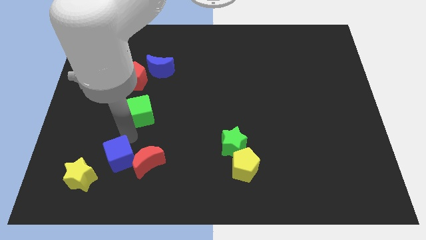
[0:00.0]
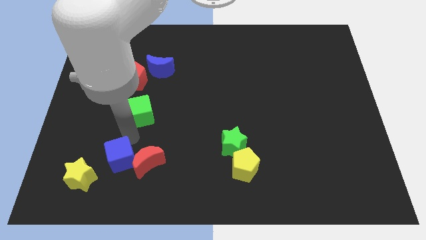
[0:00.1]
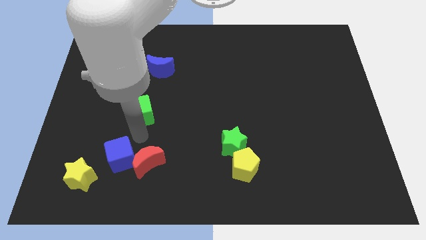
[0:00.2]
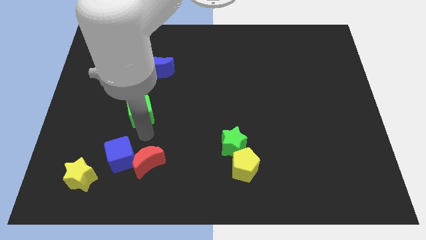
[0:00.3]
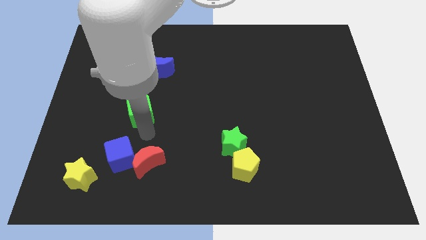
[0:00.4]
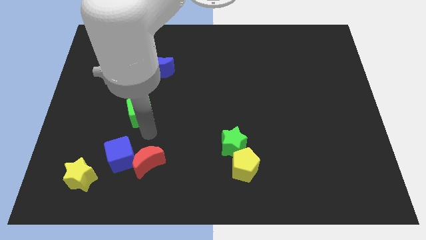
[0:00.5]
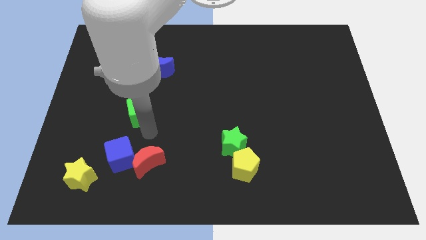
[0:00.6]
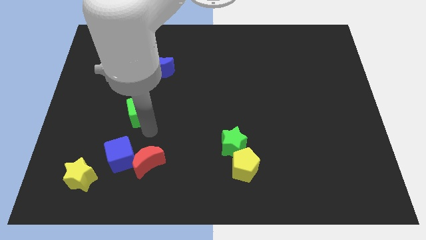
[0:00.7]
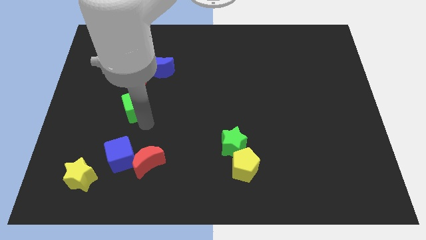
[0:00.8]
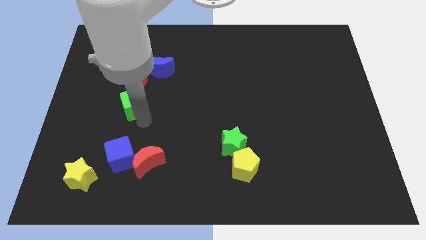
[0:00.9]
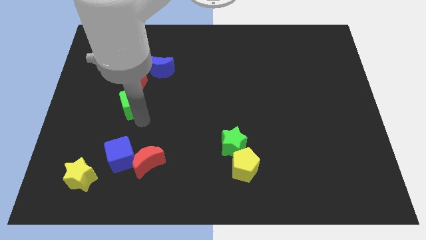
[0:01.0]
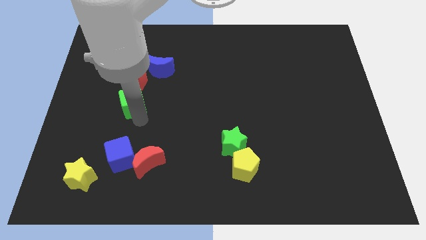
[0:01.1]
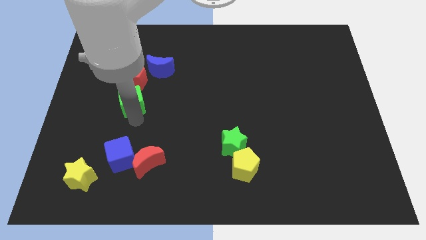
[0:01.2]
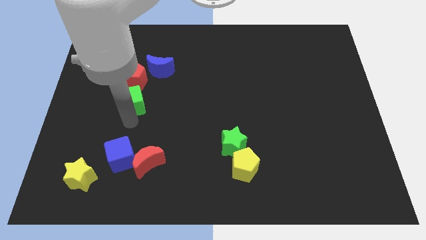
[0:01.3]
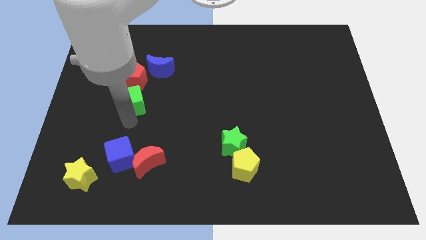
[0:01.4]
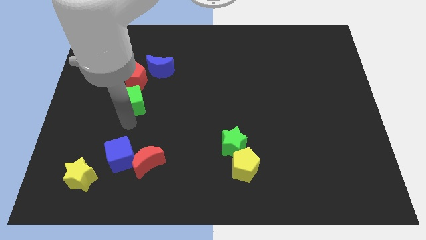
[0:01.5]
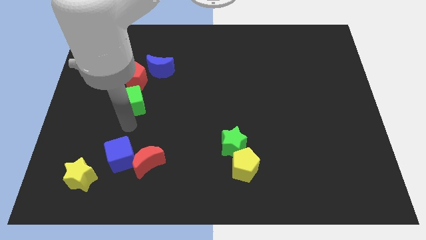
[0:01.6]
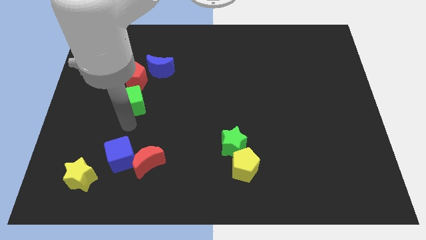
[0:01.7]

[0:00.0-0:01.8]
push green cube below the red pentagon

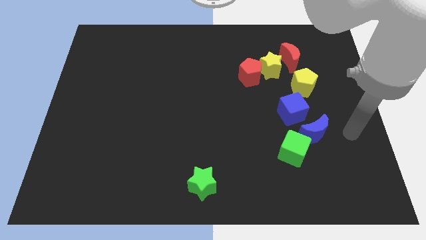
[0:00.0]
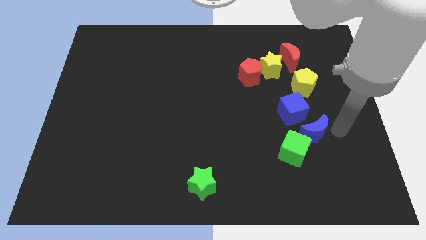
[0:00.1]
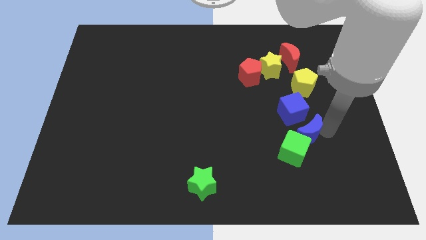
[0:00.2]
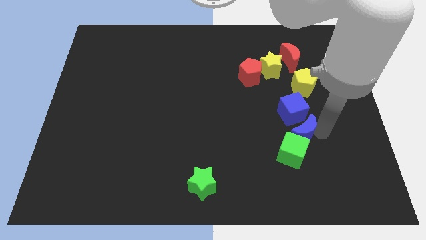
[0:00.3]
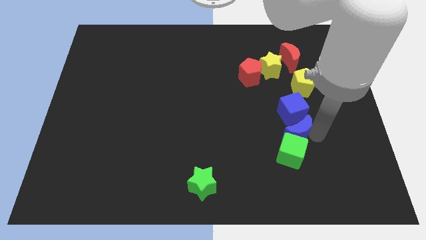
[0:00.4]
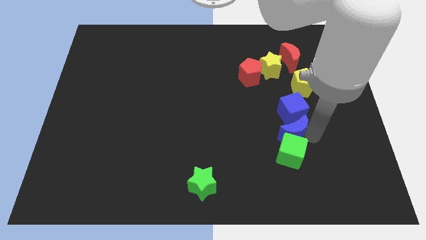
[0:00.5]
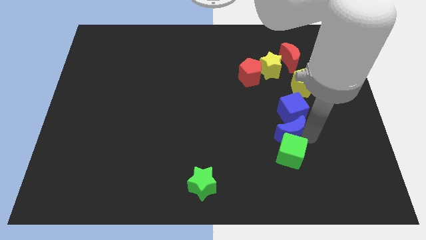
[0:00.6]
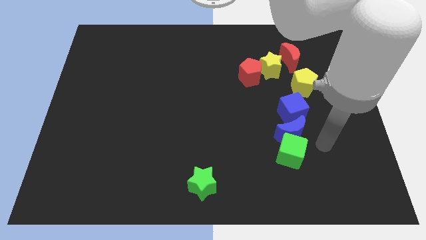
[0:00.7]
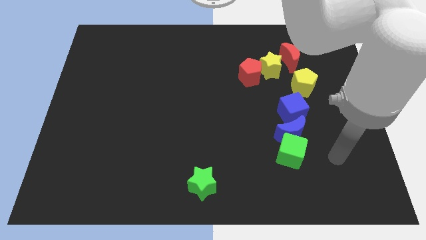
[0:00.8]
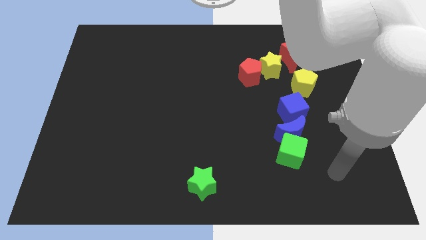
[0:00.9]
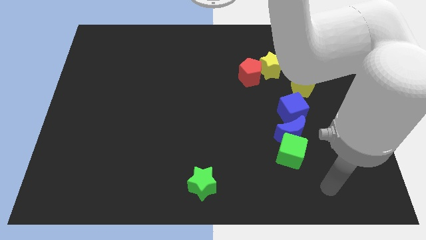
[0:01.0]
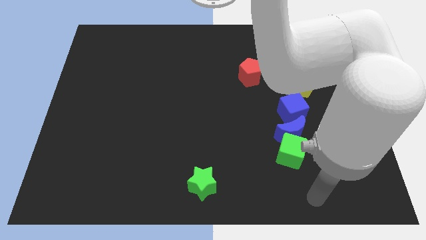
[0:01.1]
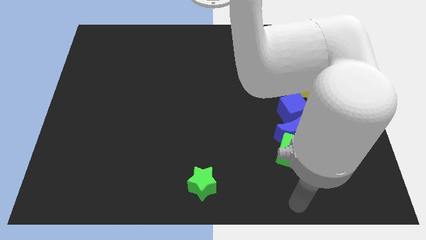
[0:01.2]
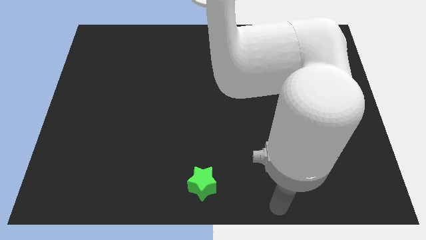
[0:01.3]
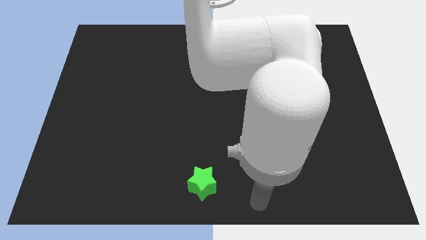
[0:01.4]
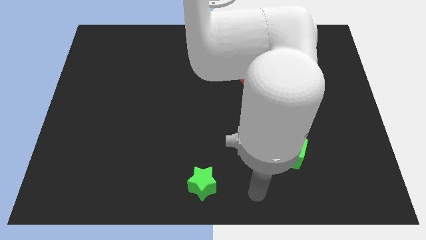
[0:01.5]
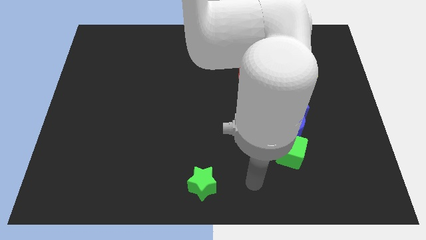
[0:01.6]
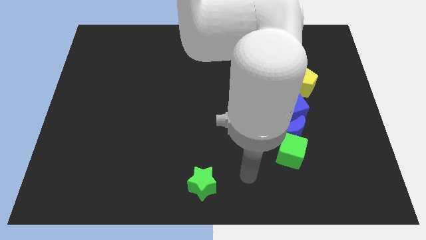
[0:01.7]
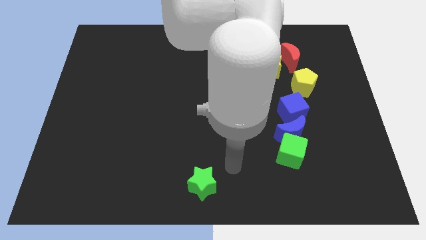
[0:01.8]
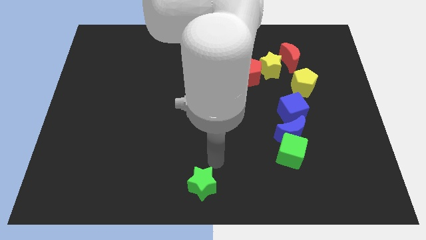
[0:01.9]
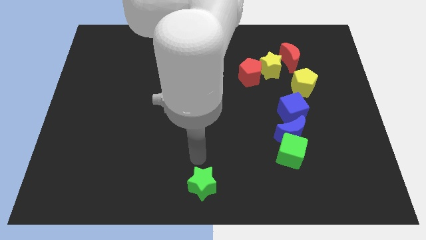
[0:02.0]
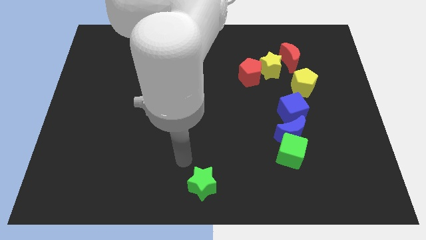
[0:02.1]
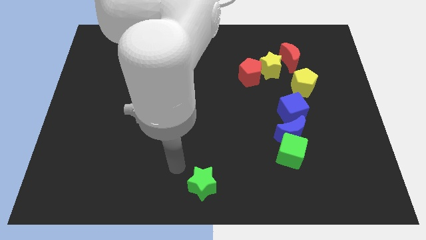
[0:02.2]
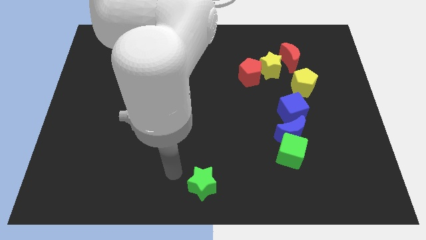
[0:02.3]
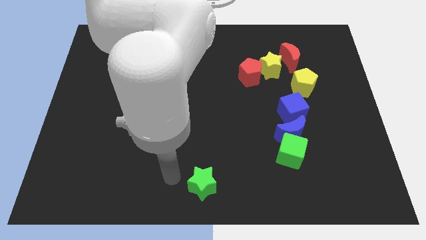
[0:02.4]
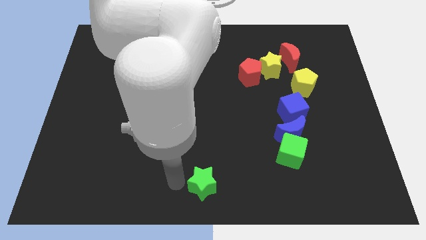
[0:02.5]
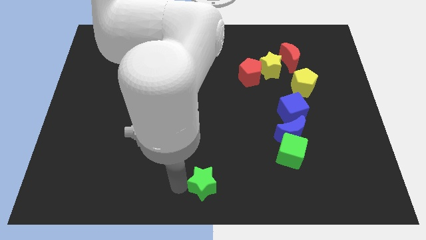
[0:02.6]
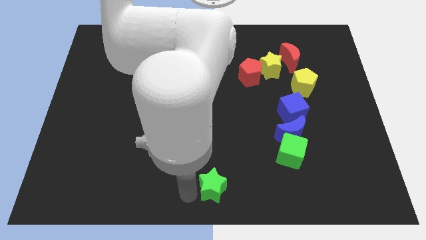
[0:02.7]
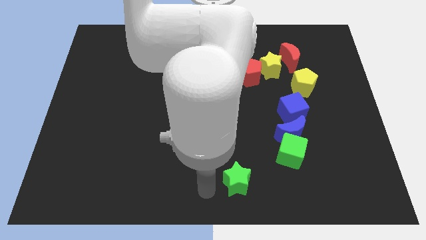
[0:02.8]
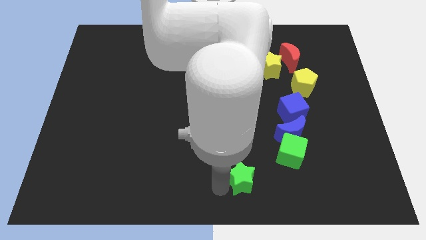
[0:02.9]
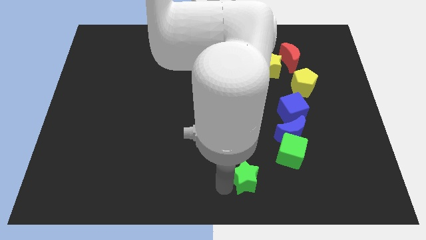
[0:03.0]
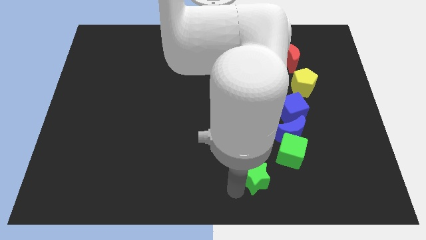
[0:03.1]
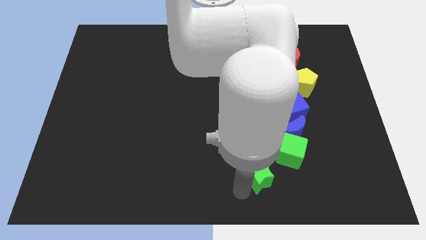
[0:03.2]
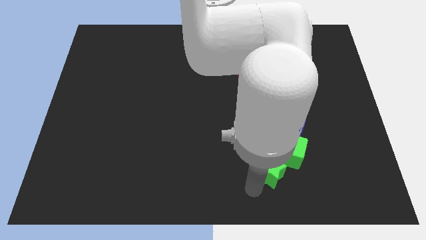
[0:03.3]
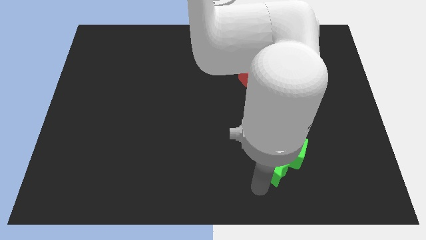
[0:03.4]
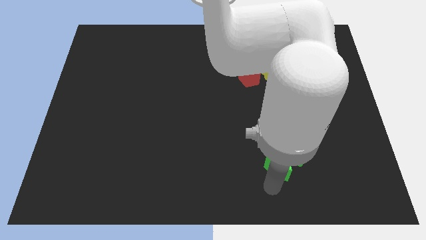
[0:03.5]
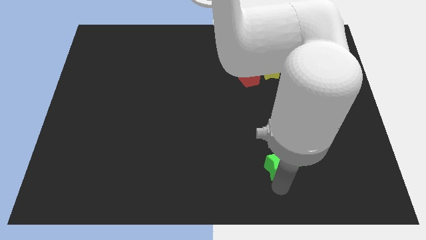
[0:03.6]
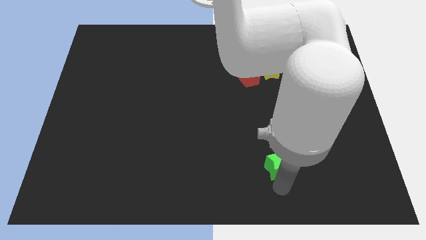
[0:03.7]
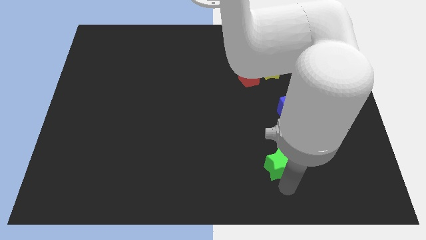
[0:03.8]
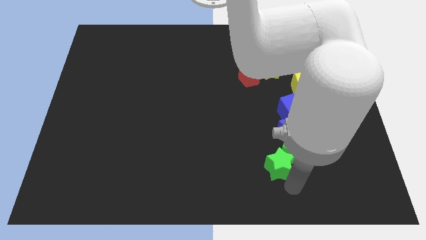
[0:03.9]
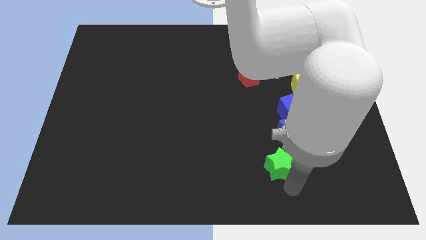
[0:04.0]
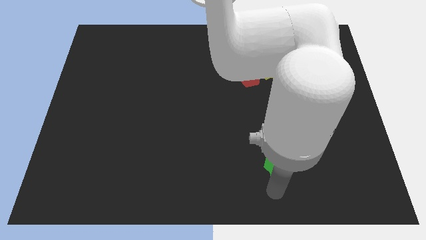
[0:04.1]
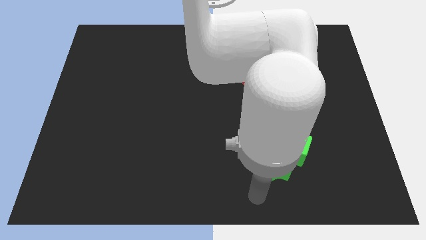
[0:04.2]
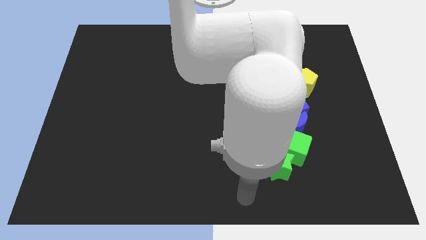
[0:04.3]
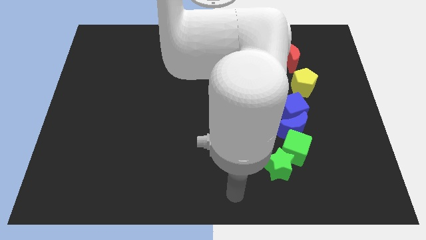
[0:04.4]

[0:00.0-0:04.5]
move the green star into the green cube

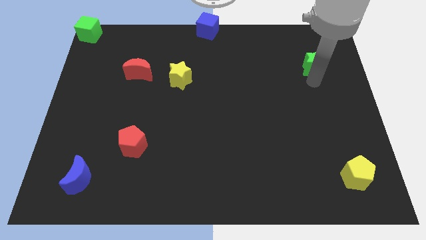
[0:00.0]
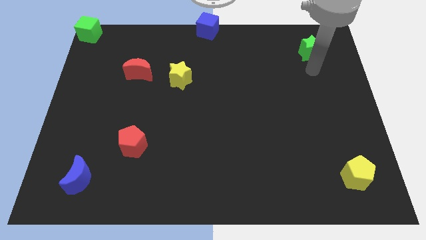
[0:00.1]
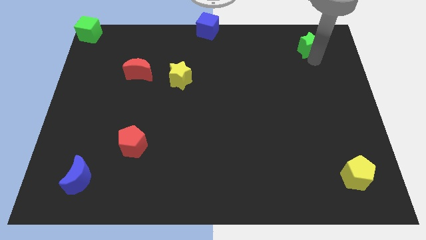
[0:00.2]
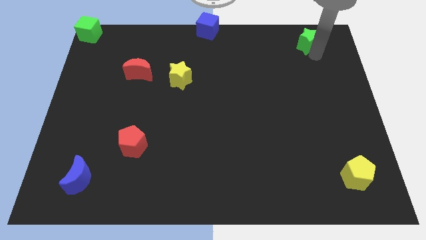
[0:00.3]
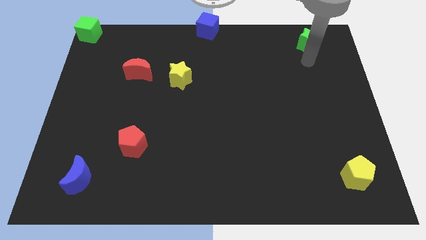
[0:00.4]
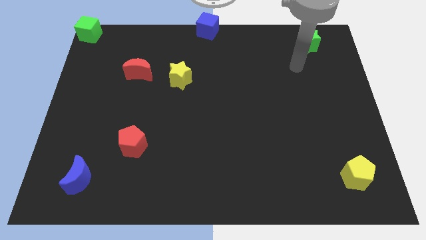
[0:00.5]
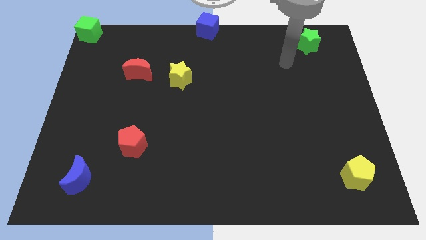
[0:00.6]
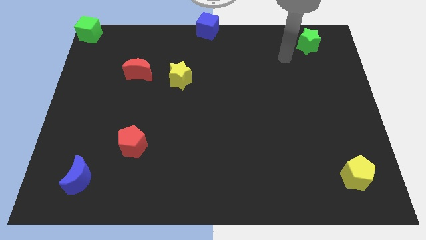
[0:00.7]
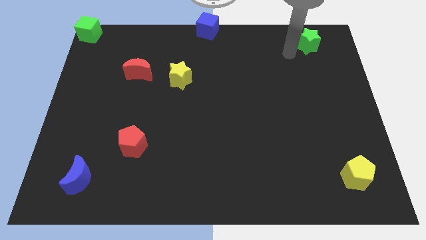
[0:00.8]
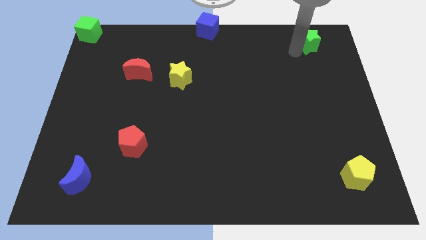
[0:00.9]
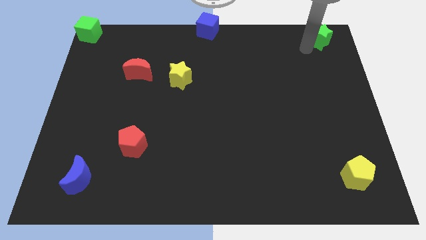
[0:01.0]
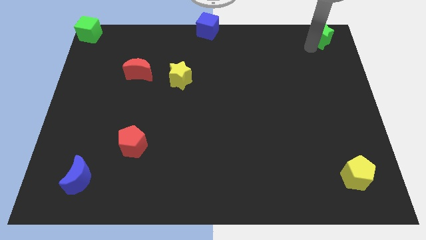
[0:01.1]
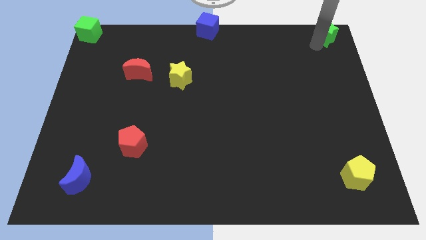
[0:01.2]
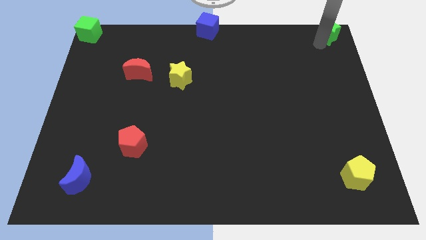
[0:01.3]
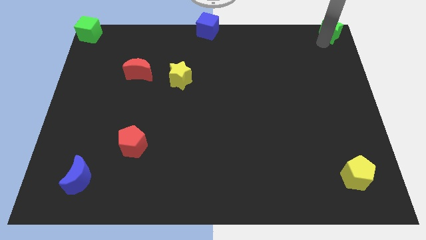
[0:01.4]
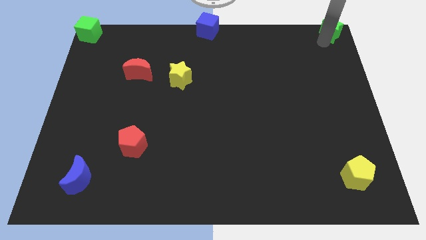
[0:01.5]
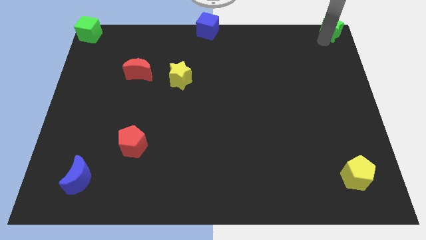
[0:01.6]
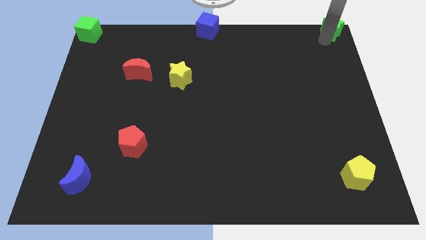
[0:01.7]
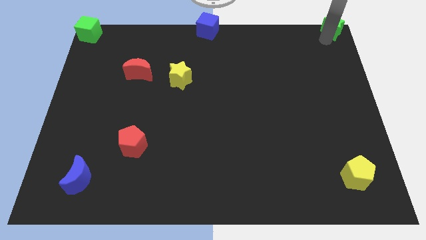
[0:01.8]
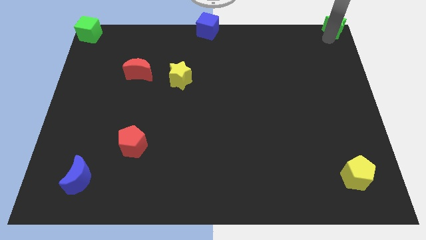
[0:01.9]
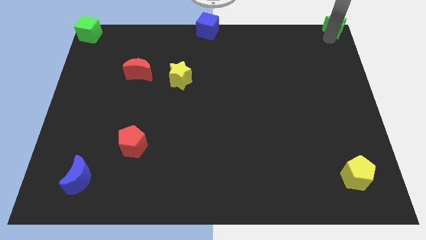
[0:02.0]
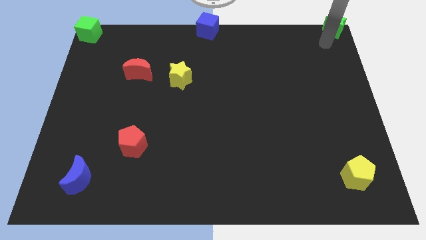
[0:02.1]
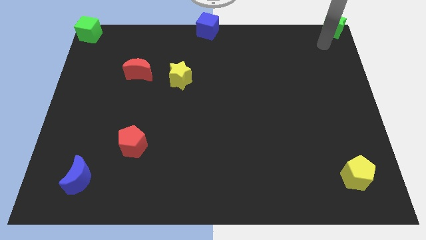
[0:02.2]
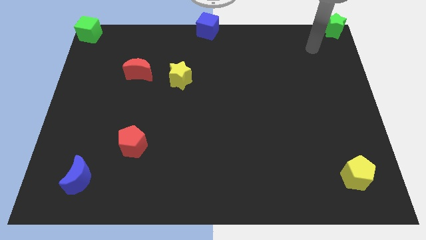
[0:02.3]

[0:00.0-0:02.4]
place the green star at the top right corner of the board

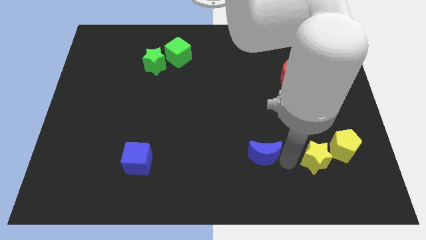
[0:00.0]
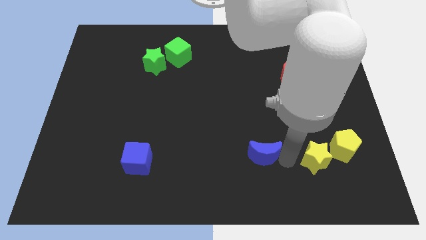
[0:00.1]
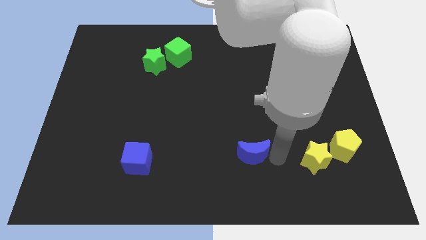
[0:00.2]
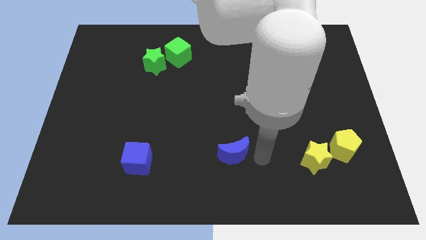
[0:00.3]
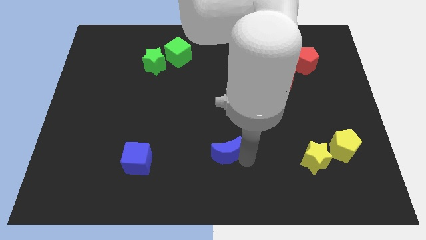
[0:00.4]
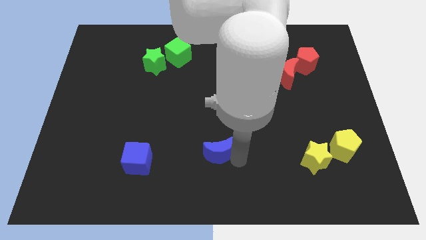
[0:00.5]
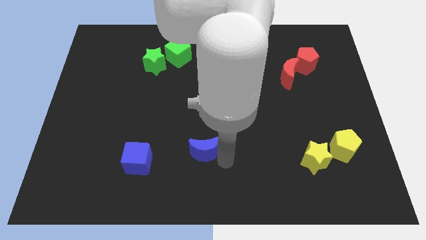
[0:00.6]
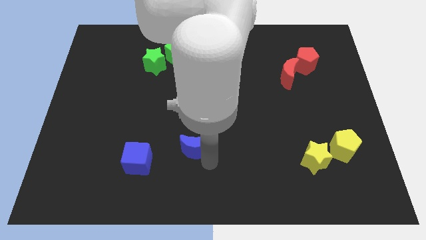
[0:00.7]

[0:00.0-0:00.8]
move the blue crescent towards blue cube
